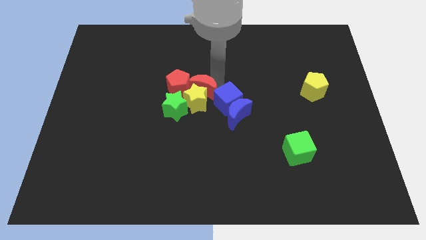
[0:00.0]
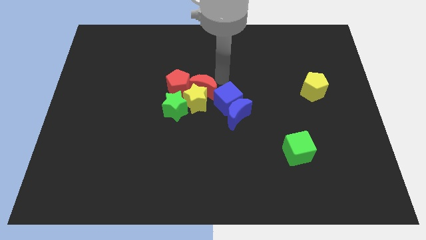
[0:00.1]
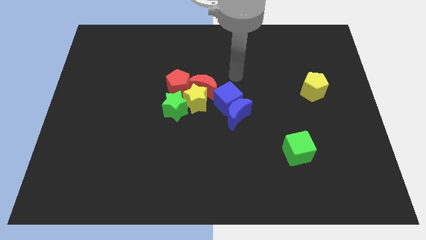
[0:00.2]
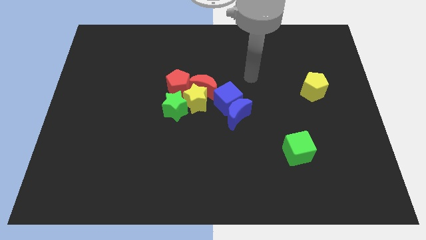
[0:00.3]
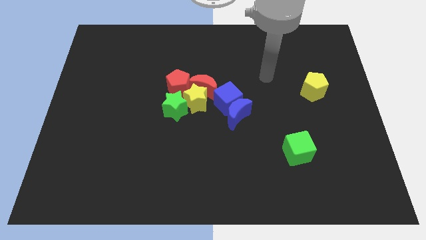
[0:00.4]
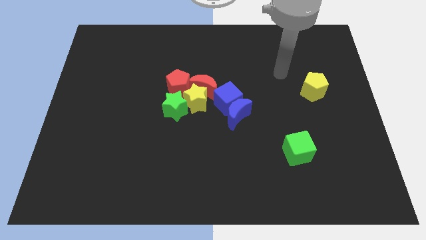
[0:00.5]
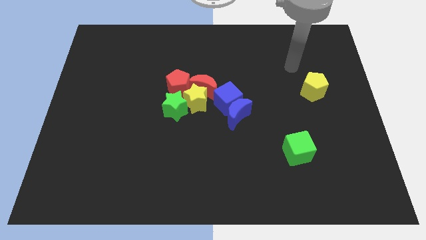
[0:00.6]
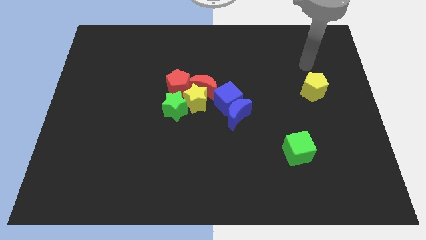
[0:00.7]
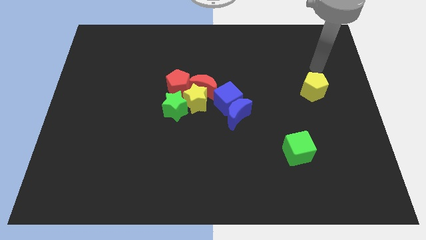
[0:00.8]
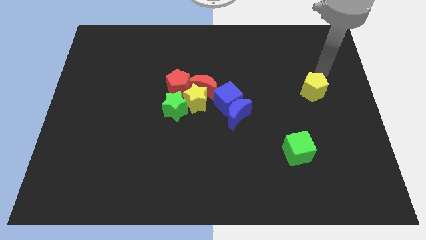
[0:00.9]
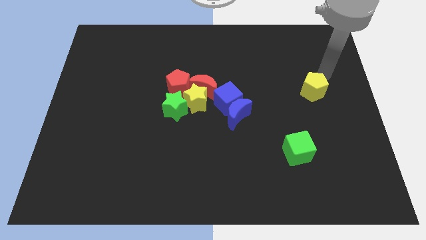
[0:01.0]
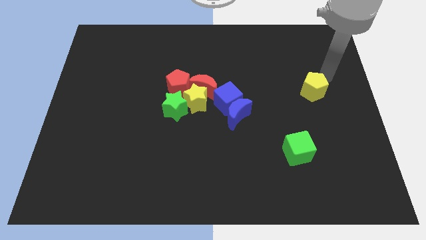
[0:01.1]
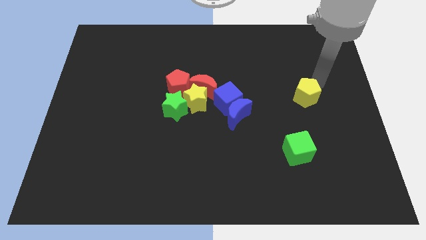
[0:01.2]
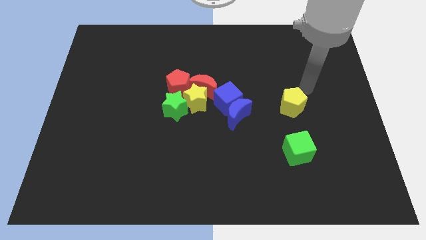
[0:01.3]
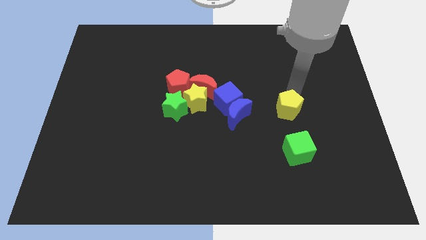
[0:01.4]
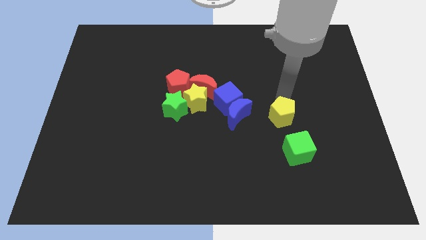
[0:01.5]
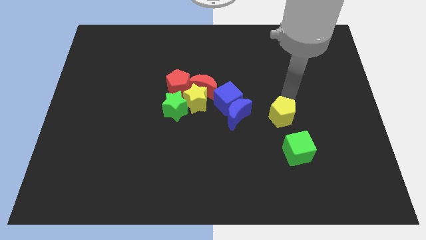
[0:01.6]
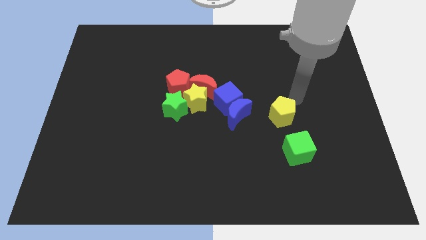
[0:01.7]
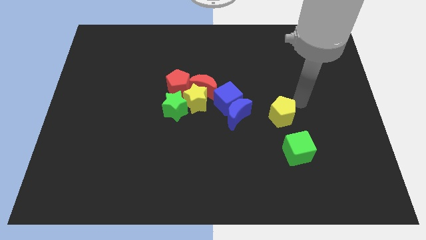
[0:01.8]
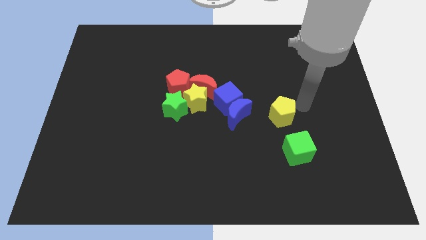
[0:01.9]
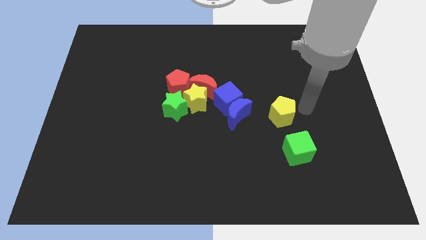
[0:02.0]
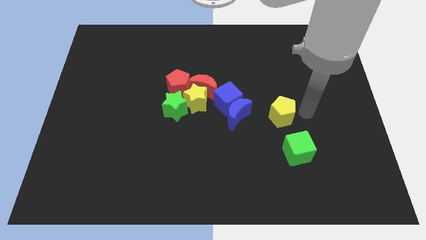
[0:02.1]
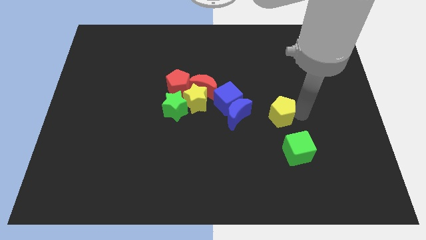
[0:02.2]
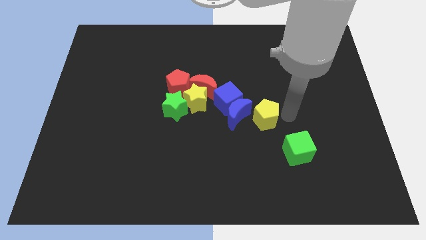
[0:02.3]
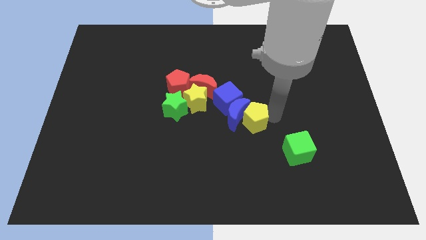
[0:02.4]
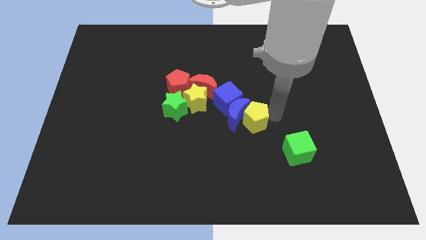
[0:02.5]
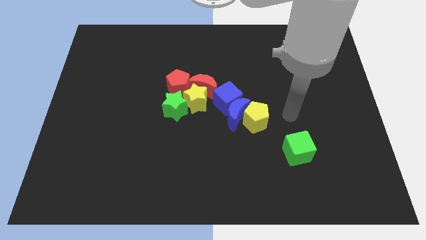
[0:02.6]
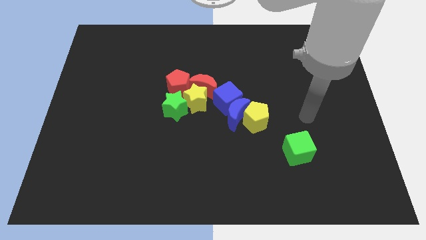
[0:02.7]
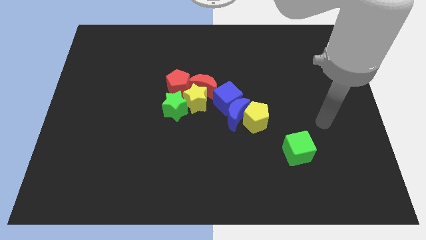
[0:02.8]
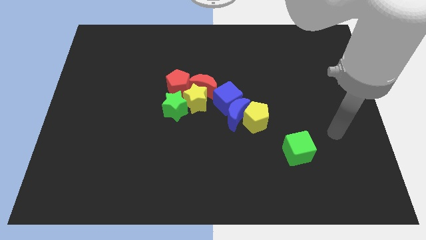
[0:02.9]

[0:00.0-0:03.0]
push yellow pentagon towards blue moon

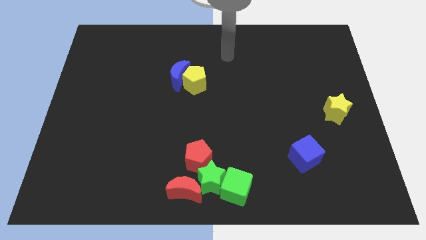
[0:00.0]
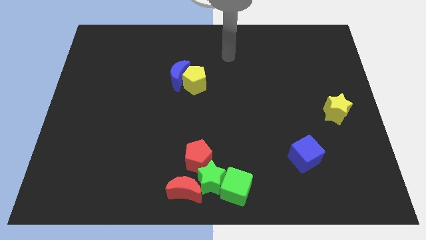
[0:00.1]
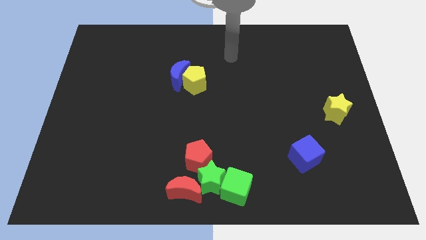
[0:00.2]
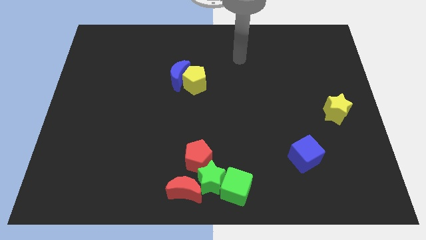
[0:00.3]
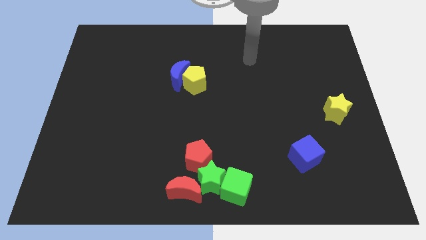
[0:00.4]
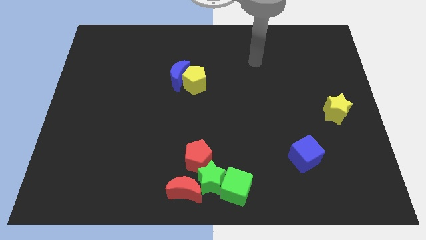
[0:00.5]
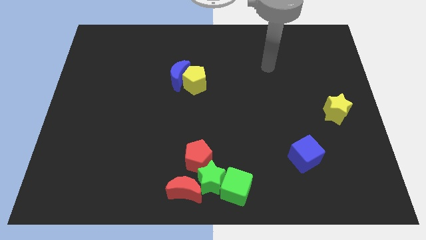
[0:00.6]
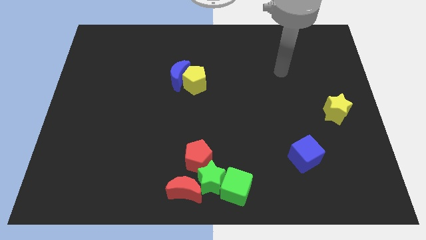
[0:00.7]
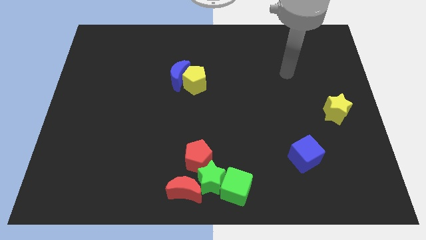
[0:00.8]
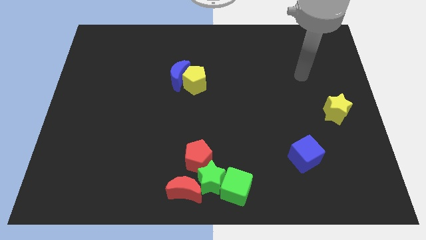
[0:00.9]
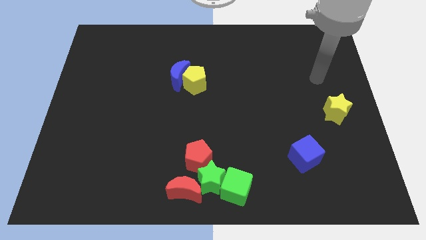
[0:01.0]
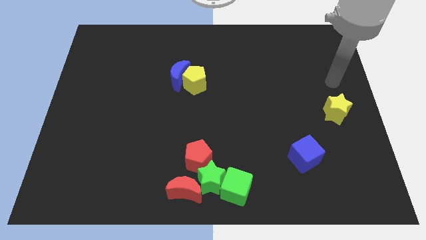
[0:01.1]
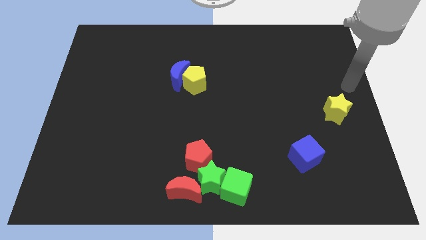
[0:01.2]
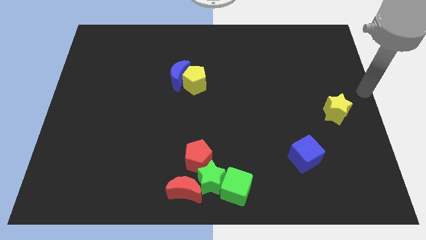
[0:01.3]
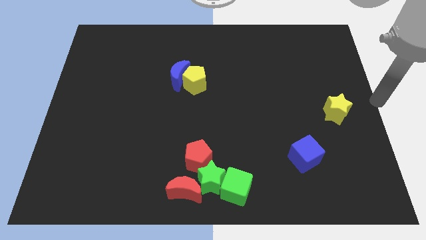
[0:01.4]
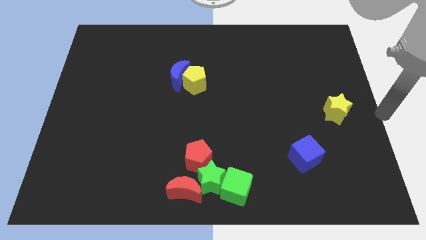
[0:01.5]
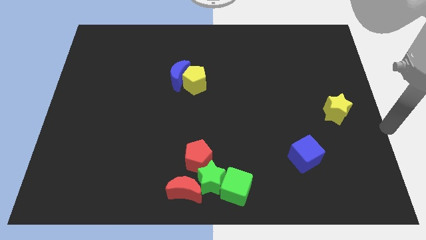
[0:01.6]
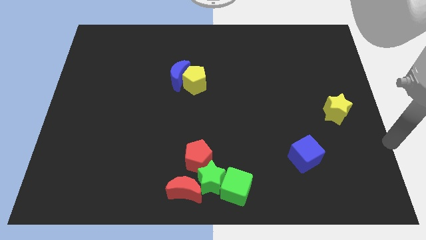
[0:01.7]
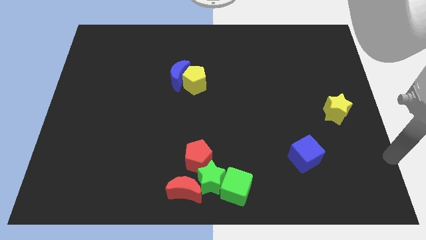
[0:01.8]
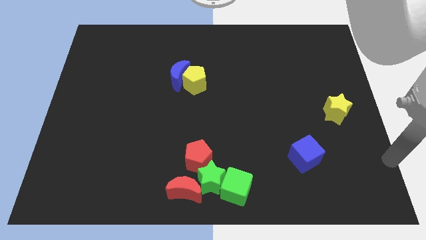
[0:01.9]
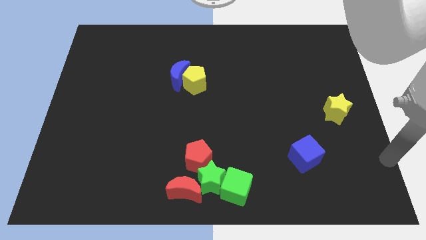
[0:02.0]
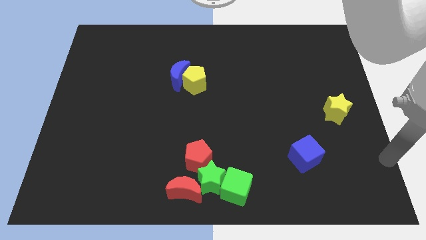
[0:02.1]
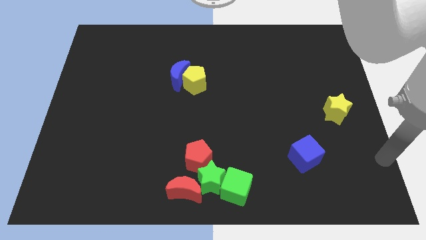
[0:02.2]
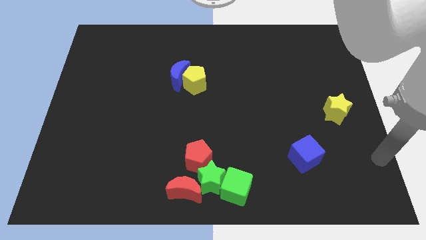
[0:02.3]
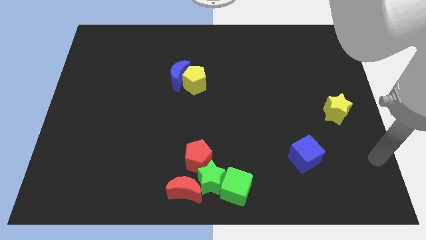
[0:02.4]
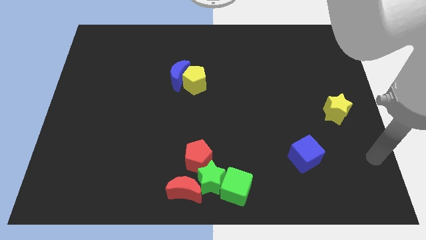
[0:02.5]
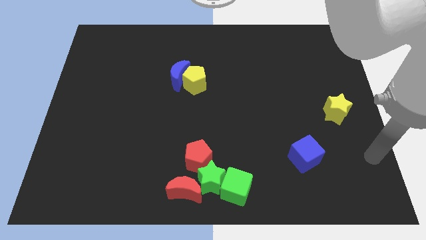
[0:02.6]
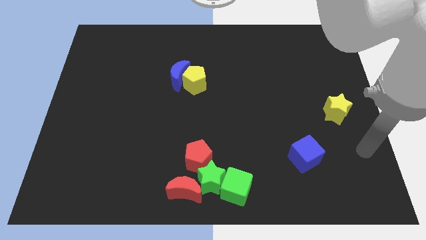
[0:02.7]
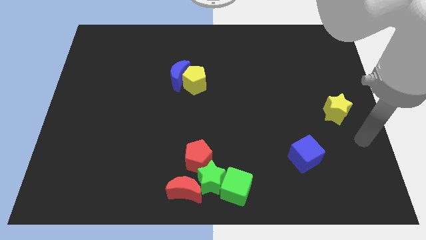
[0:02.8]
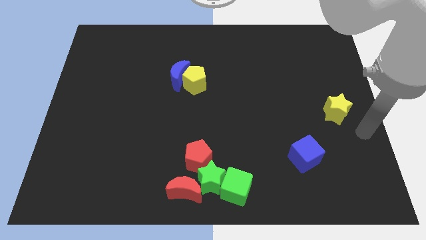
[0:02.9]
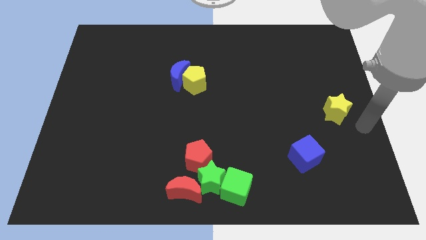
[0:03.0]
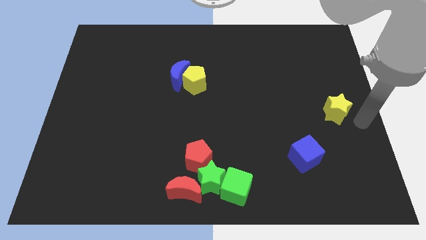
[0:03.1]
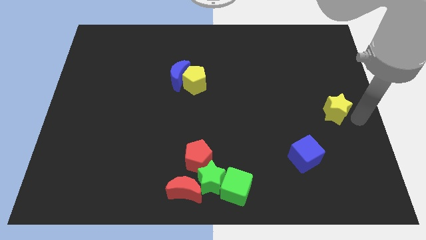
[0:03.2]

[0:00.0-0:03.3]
push your arm at the center right

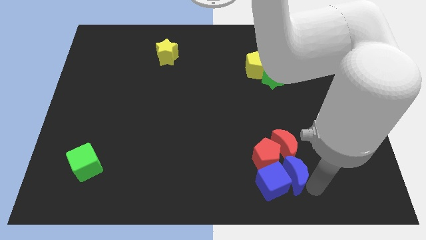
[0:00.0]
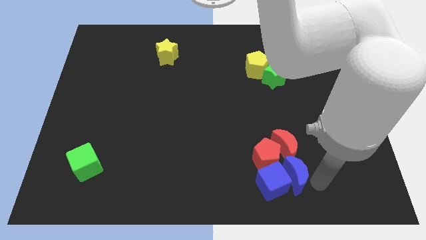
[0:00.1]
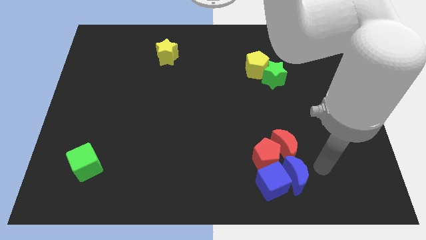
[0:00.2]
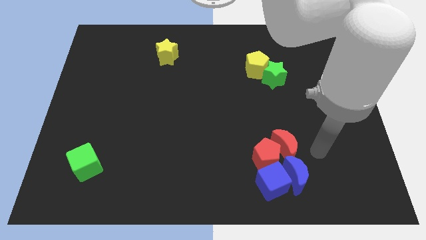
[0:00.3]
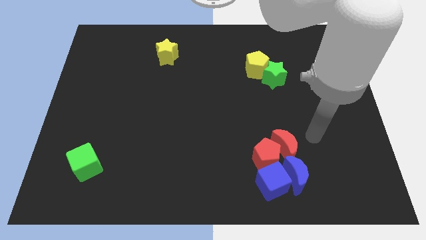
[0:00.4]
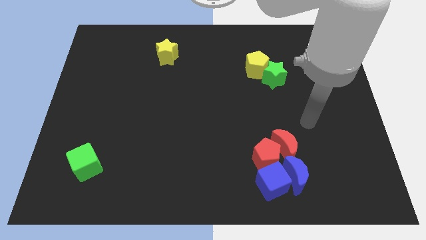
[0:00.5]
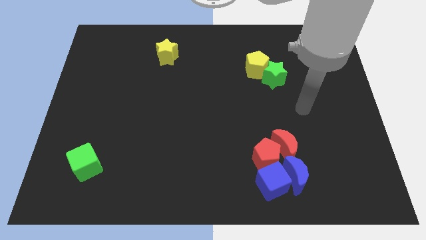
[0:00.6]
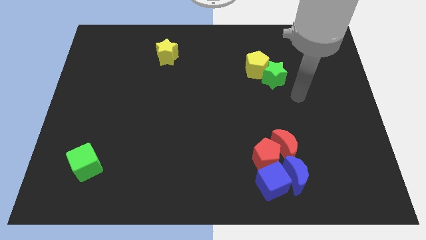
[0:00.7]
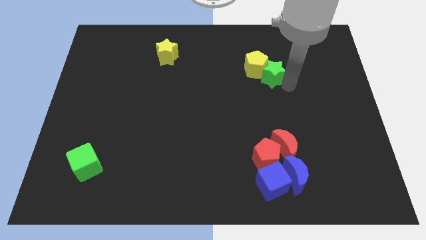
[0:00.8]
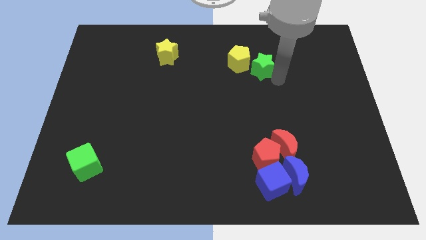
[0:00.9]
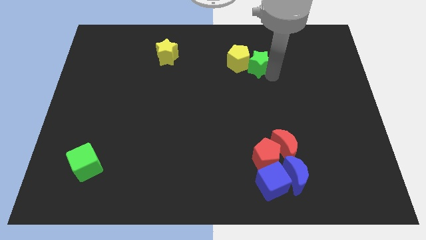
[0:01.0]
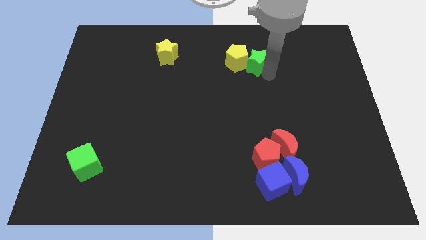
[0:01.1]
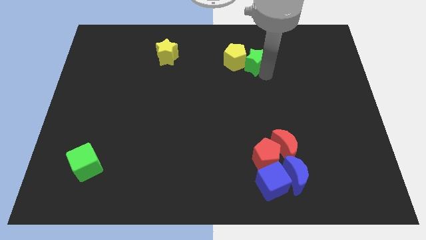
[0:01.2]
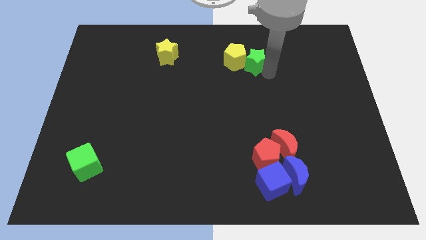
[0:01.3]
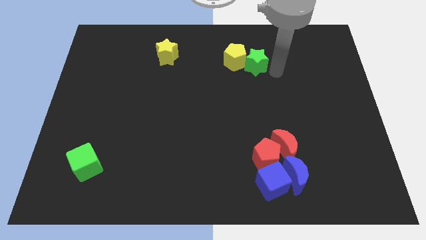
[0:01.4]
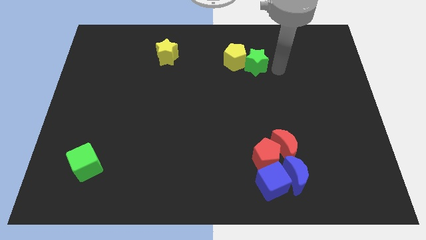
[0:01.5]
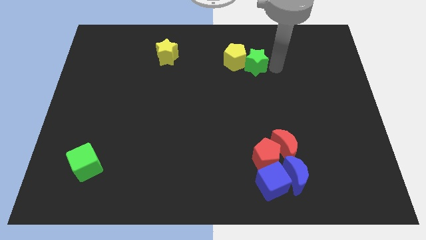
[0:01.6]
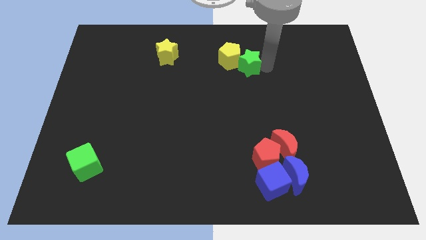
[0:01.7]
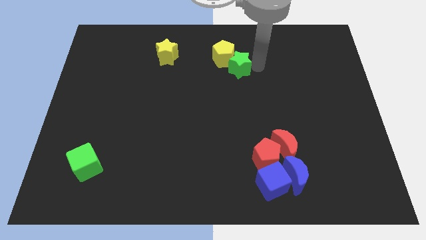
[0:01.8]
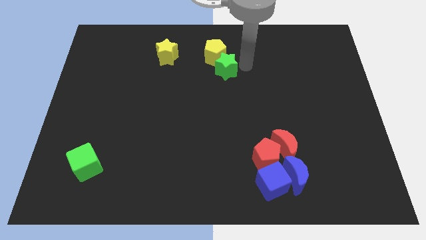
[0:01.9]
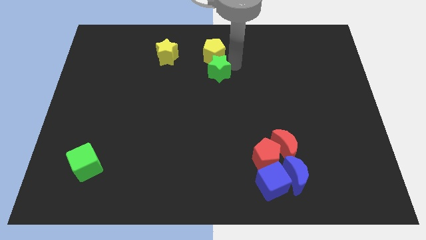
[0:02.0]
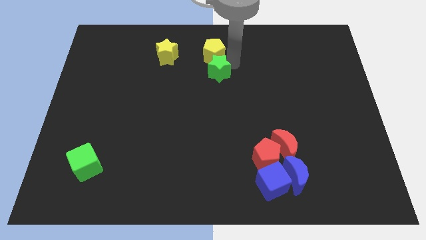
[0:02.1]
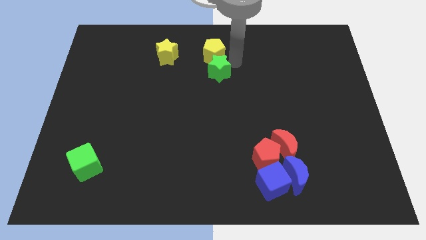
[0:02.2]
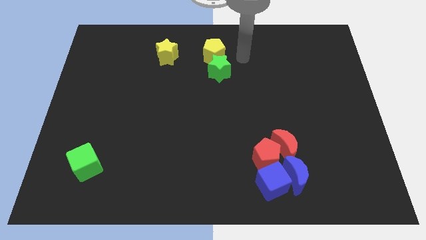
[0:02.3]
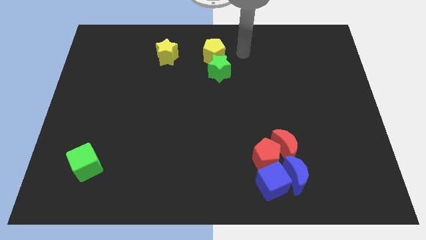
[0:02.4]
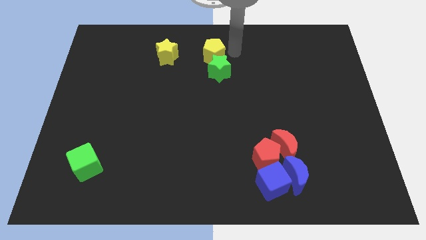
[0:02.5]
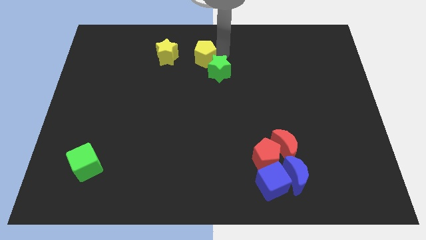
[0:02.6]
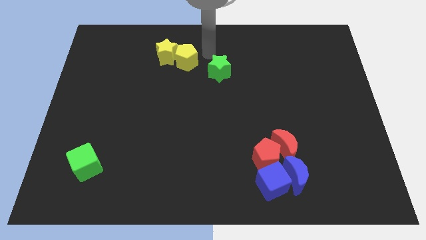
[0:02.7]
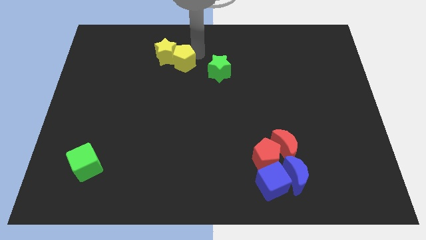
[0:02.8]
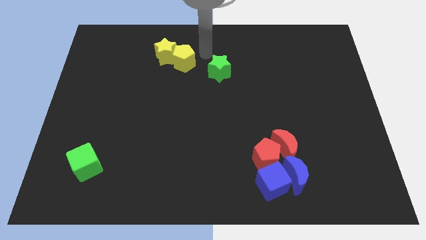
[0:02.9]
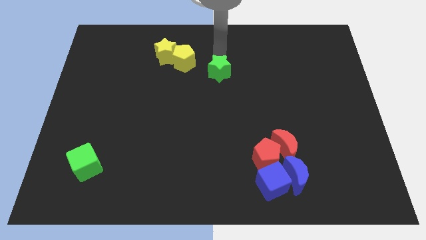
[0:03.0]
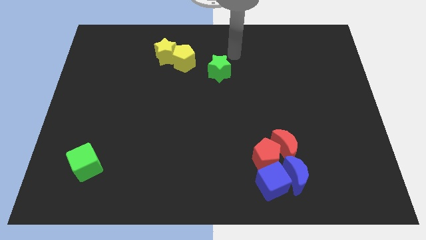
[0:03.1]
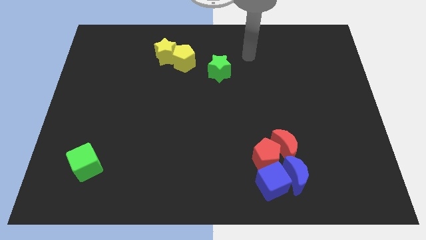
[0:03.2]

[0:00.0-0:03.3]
move the yellow pentagon to the right of the yellow star
